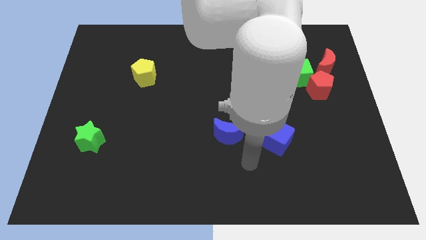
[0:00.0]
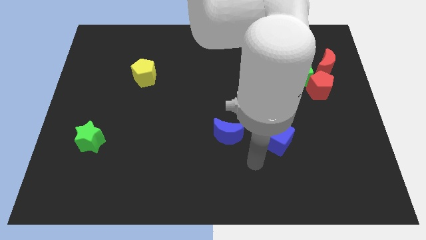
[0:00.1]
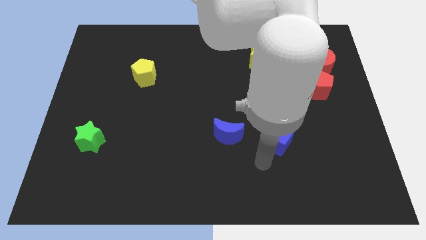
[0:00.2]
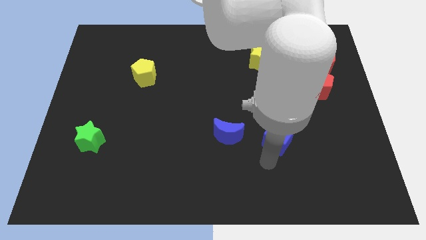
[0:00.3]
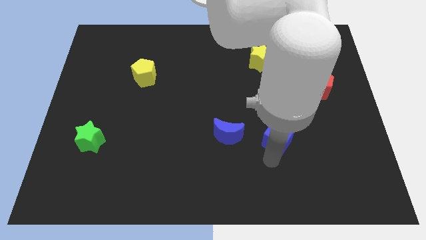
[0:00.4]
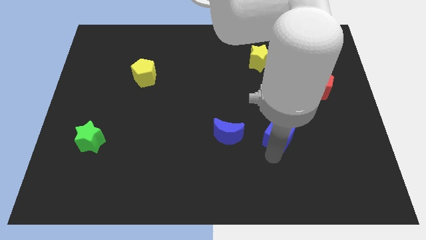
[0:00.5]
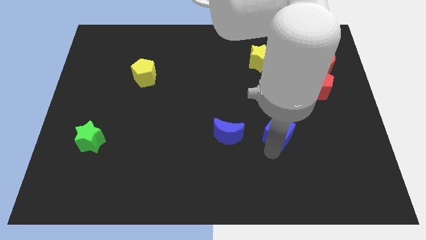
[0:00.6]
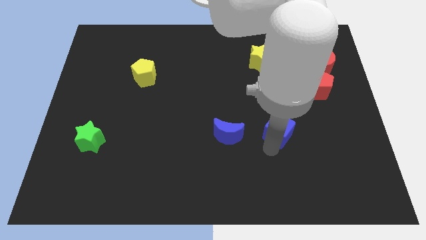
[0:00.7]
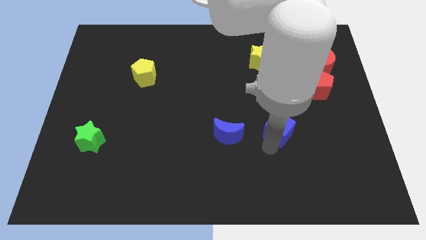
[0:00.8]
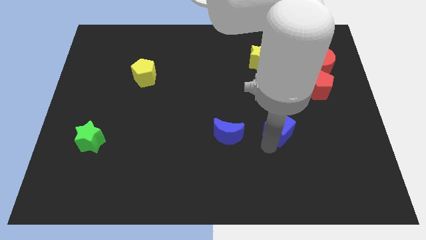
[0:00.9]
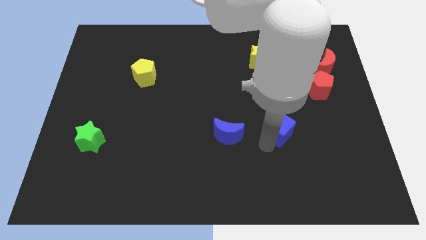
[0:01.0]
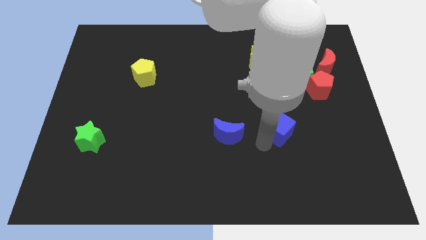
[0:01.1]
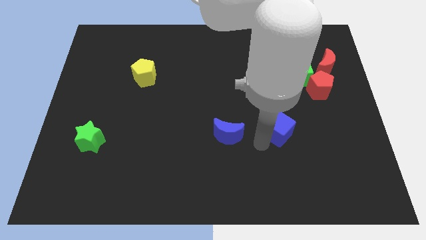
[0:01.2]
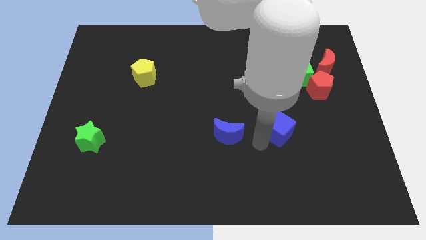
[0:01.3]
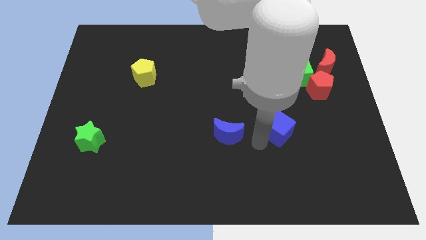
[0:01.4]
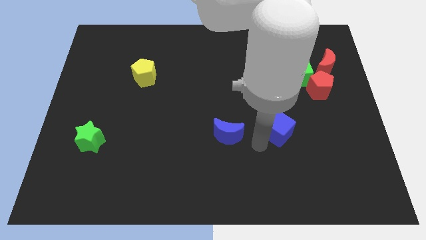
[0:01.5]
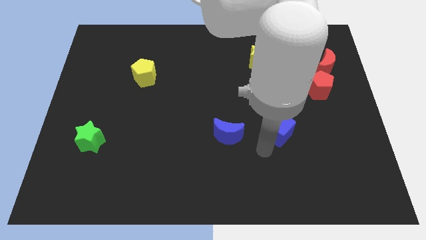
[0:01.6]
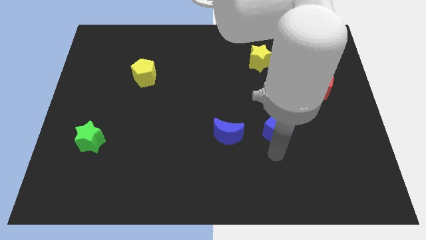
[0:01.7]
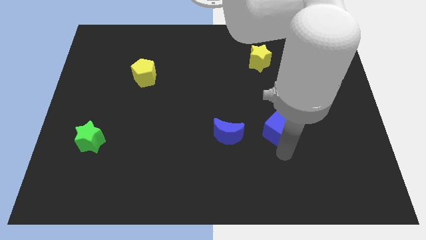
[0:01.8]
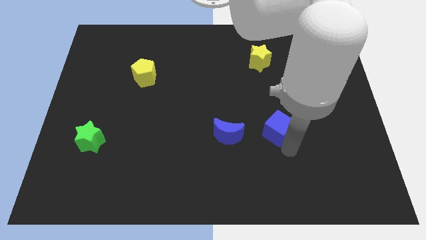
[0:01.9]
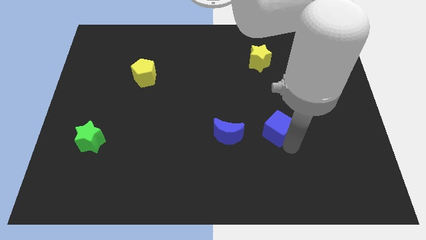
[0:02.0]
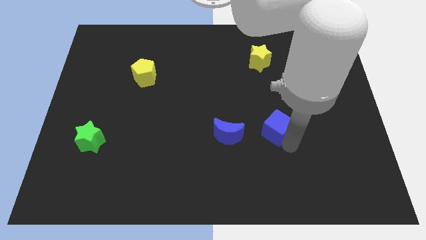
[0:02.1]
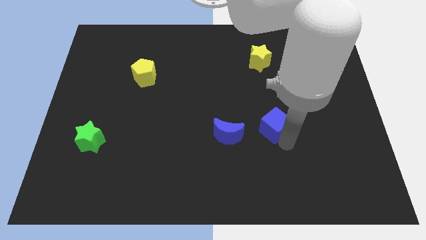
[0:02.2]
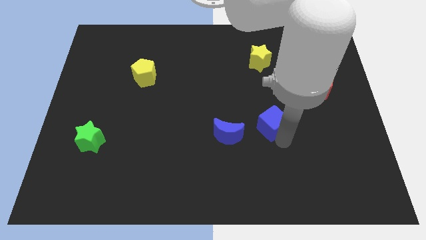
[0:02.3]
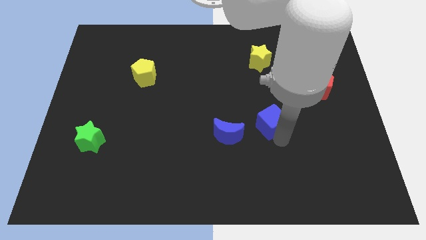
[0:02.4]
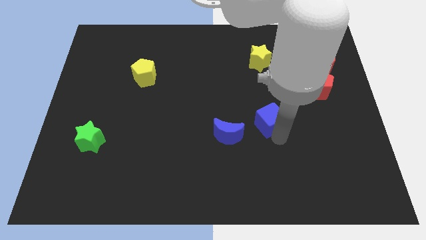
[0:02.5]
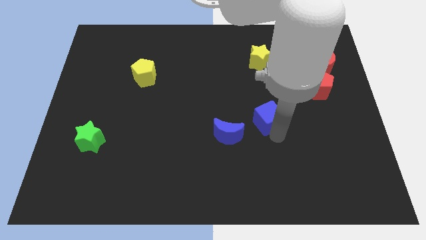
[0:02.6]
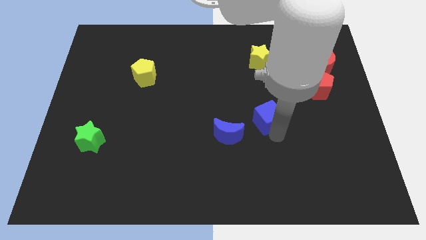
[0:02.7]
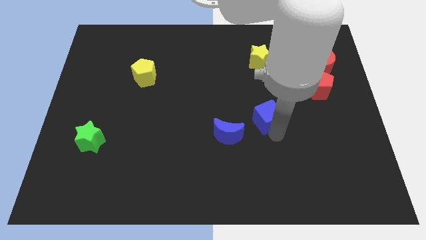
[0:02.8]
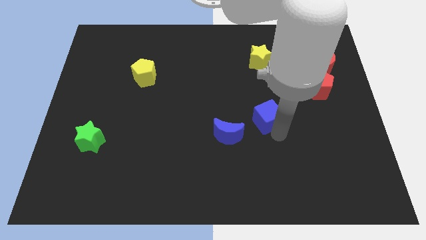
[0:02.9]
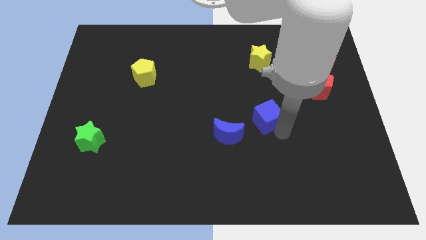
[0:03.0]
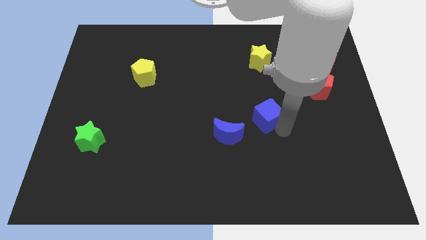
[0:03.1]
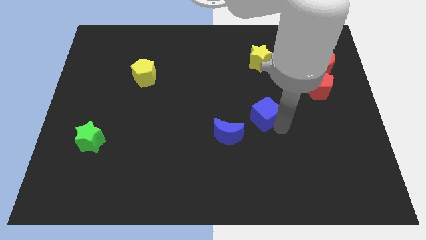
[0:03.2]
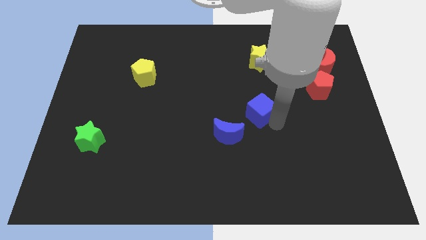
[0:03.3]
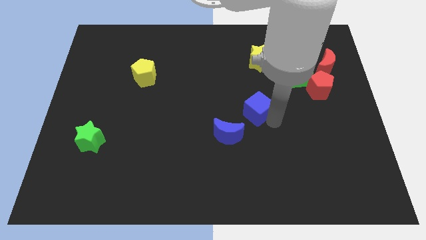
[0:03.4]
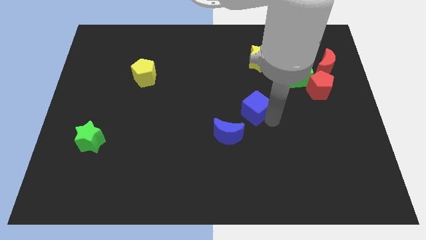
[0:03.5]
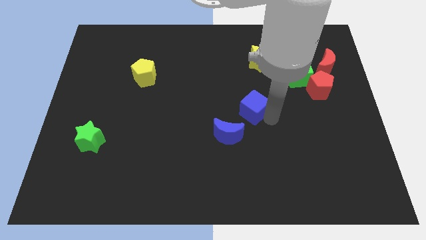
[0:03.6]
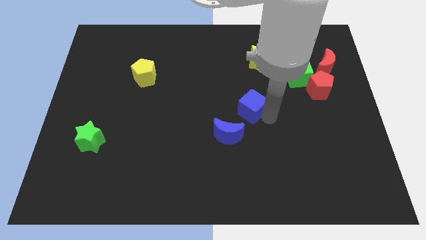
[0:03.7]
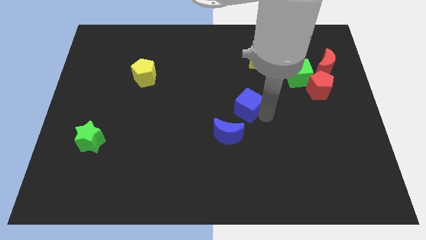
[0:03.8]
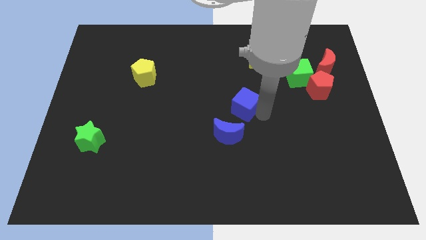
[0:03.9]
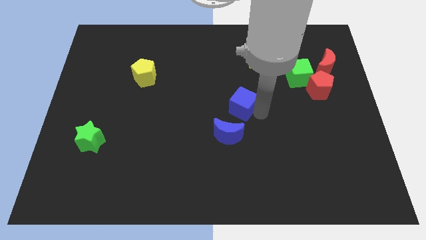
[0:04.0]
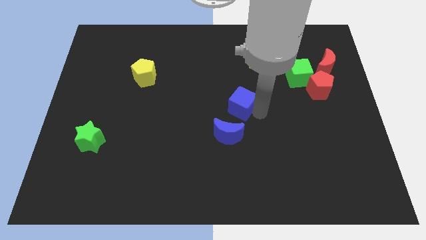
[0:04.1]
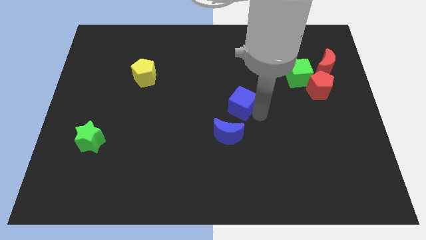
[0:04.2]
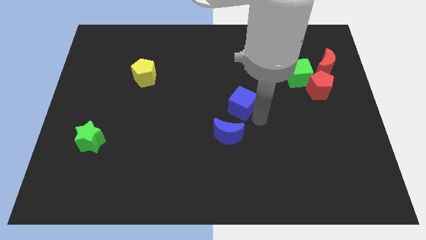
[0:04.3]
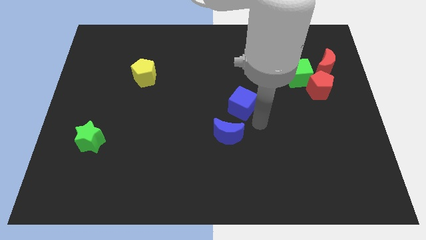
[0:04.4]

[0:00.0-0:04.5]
put the blue cube above the blue crescent

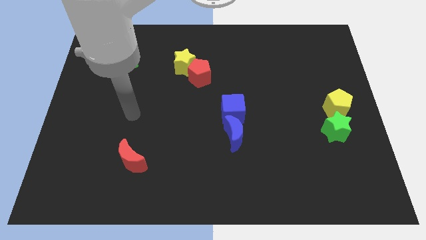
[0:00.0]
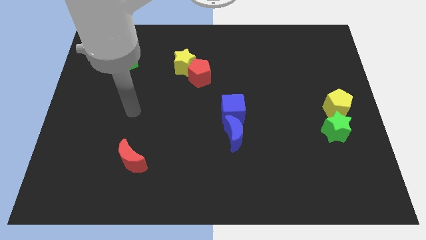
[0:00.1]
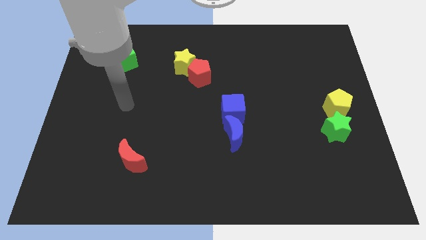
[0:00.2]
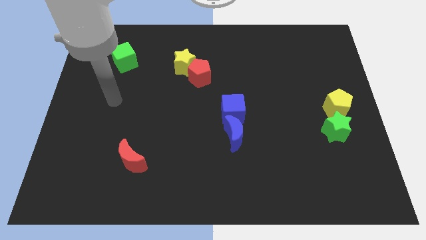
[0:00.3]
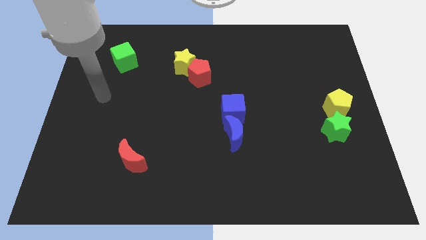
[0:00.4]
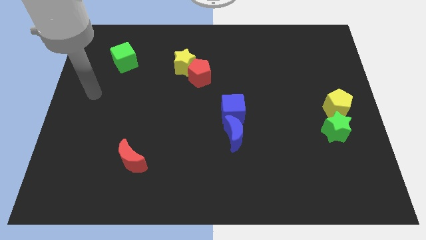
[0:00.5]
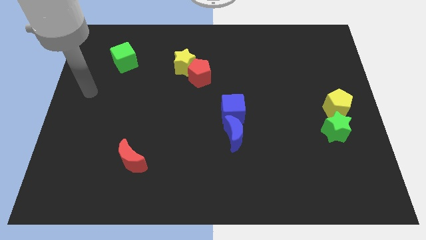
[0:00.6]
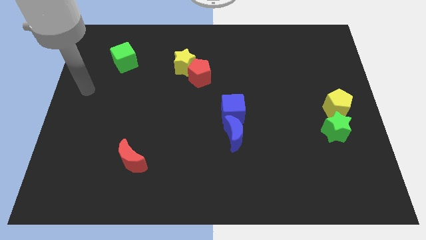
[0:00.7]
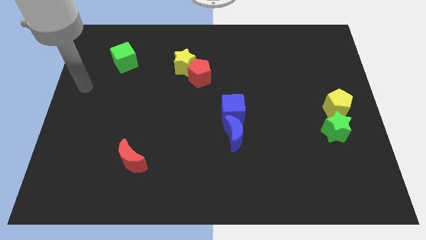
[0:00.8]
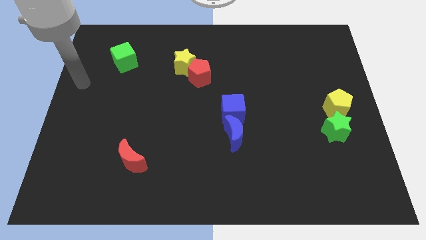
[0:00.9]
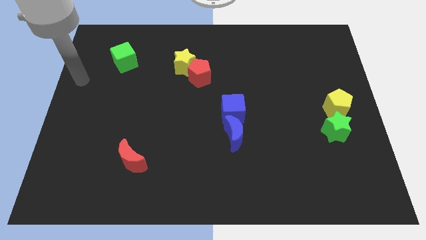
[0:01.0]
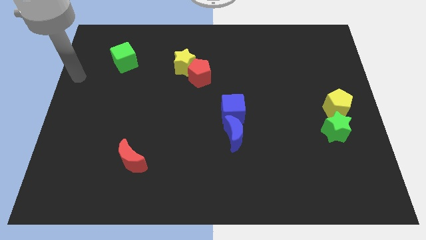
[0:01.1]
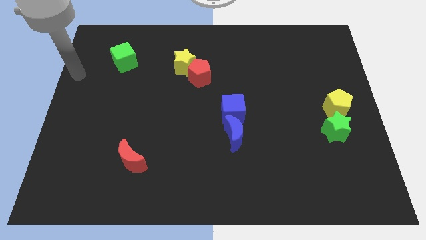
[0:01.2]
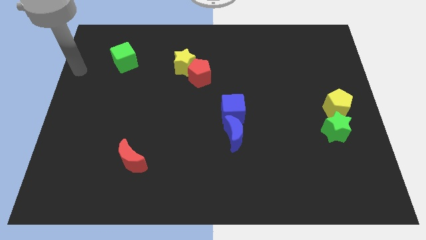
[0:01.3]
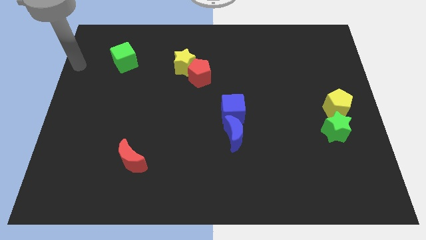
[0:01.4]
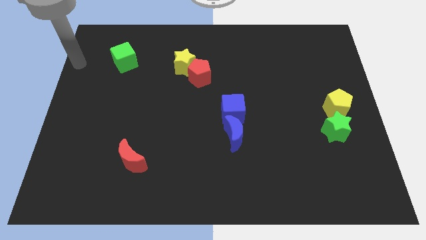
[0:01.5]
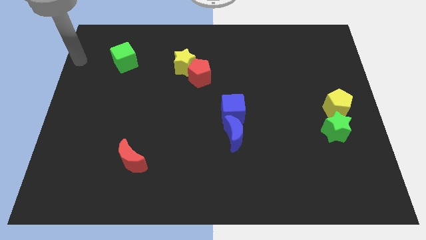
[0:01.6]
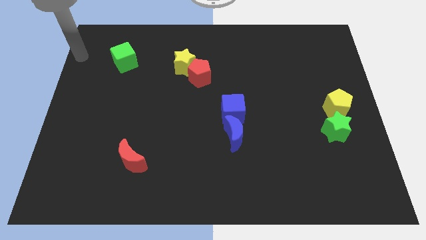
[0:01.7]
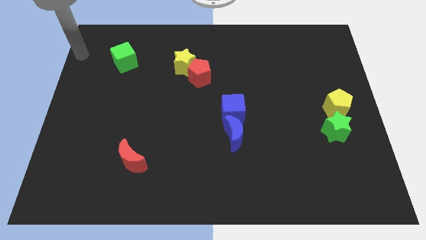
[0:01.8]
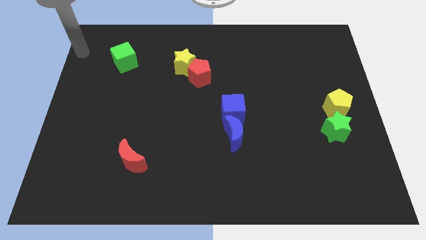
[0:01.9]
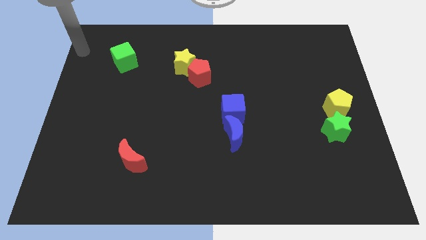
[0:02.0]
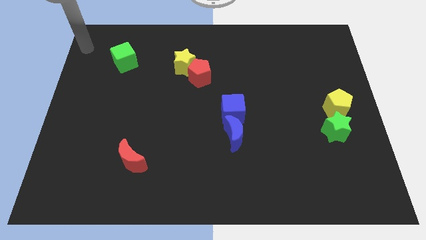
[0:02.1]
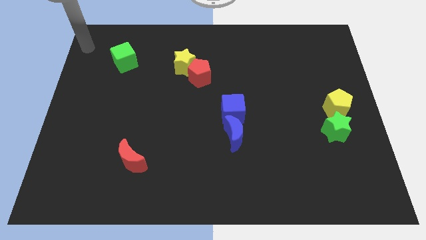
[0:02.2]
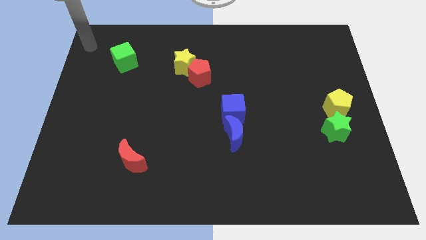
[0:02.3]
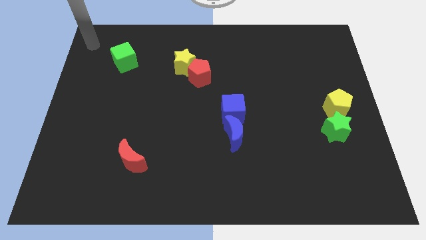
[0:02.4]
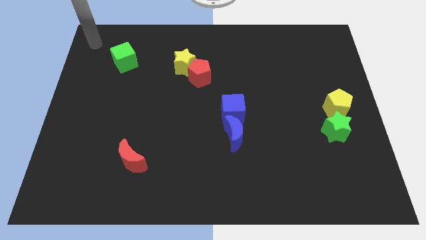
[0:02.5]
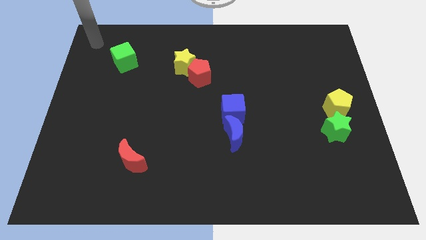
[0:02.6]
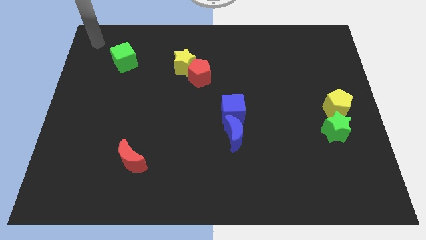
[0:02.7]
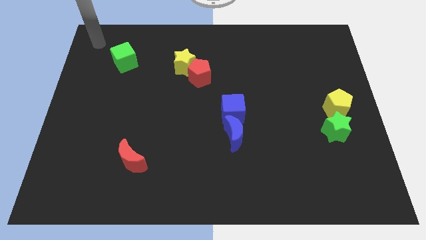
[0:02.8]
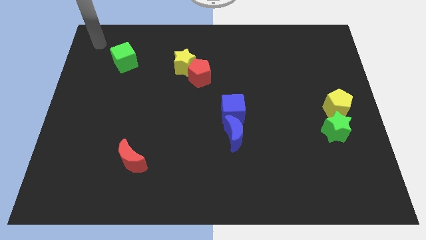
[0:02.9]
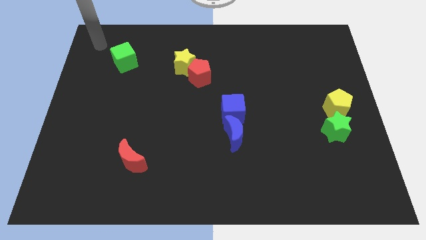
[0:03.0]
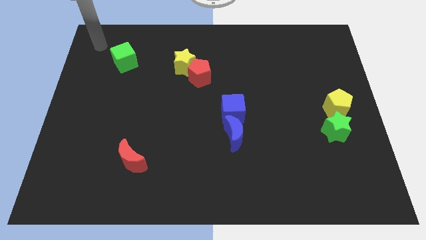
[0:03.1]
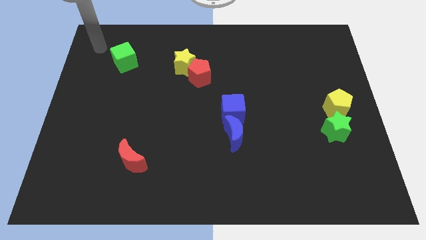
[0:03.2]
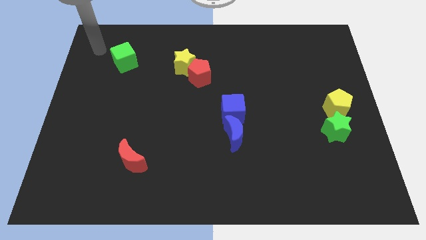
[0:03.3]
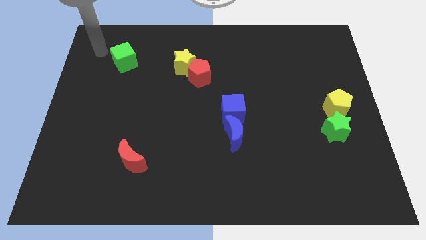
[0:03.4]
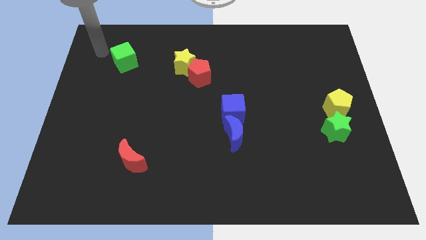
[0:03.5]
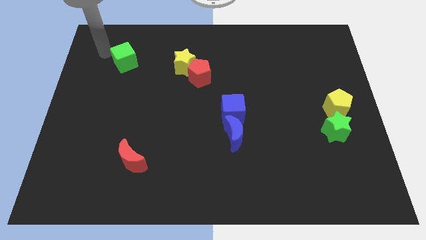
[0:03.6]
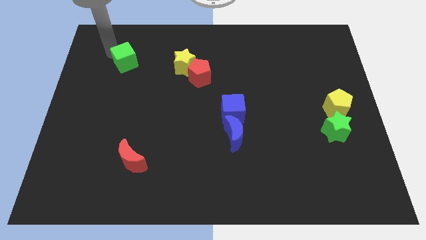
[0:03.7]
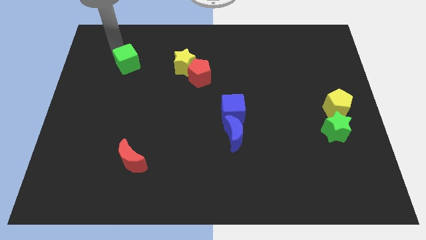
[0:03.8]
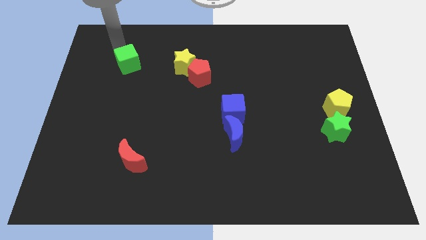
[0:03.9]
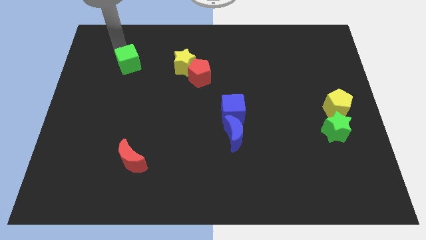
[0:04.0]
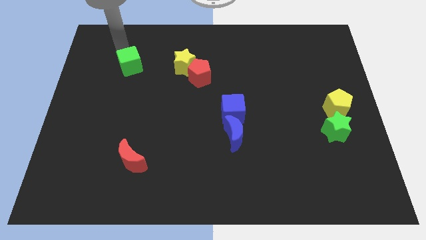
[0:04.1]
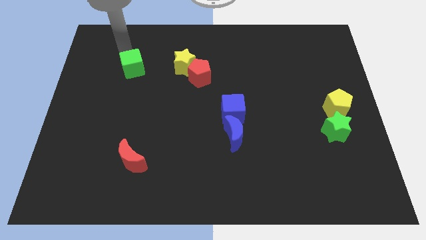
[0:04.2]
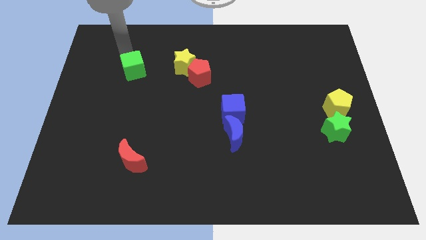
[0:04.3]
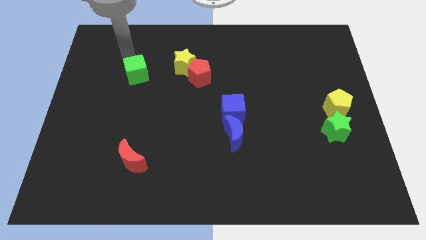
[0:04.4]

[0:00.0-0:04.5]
place the arm above green cube
